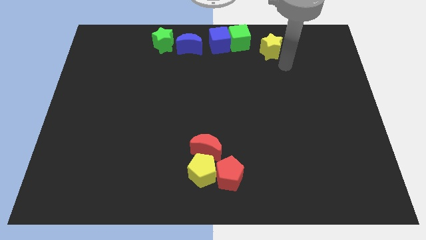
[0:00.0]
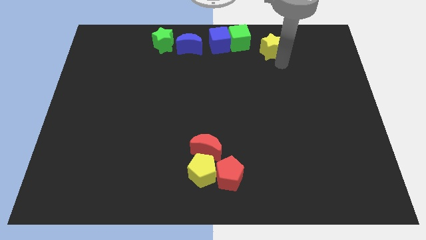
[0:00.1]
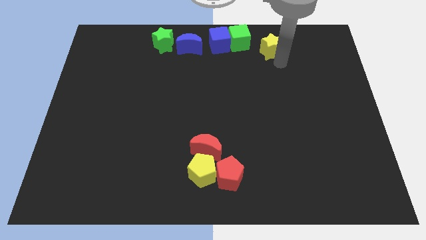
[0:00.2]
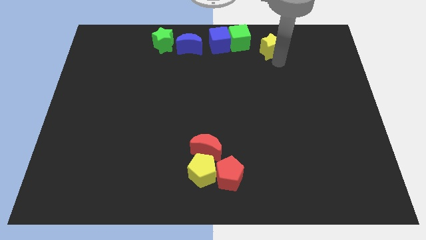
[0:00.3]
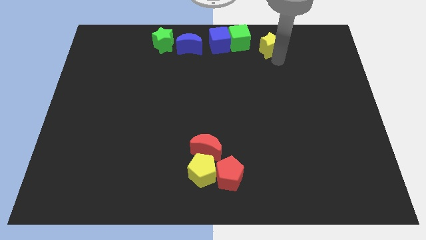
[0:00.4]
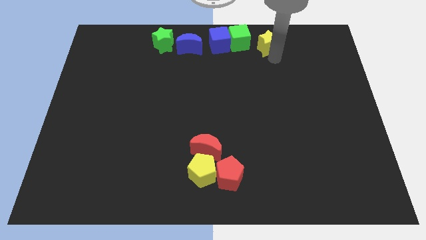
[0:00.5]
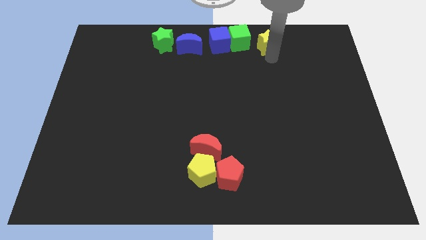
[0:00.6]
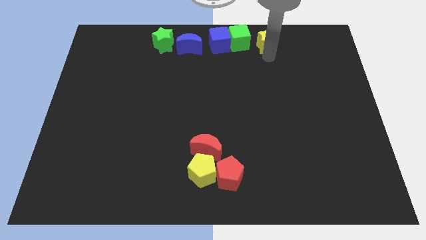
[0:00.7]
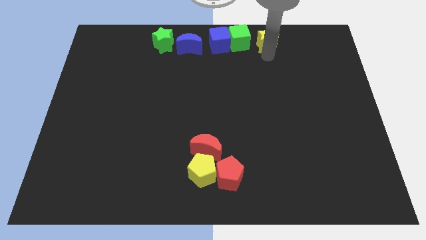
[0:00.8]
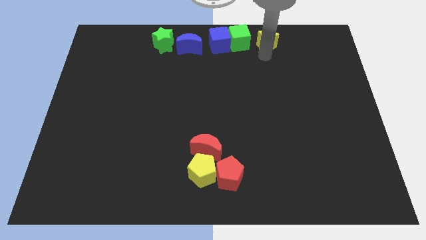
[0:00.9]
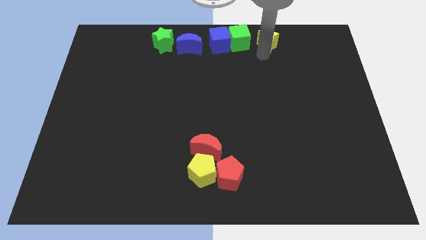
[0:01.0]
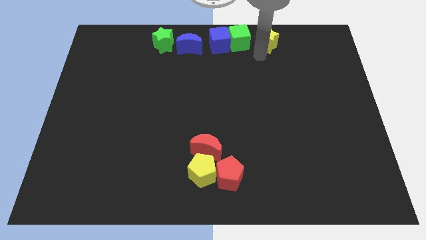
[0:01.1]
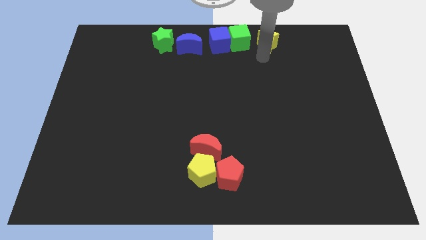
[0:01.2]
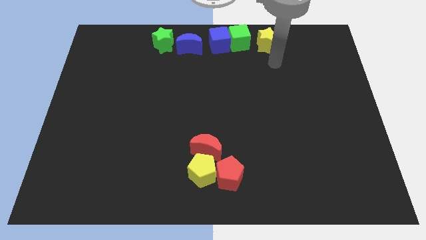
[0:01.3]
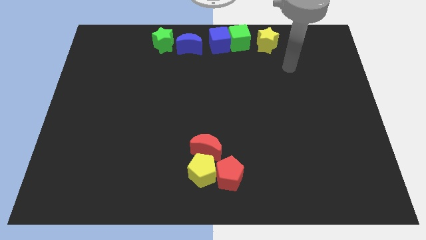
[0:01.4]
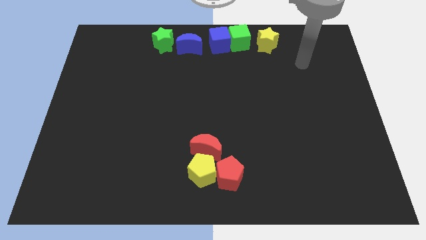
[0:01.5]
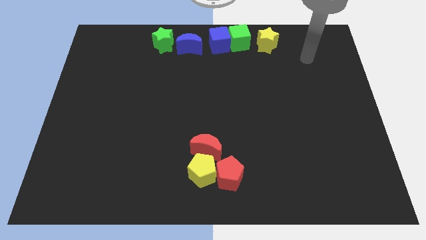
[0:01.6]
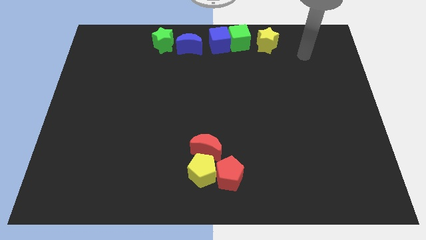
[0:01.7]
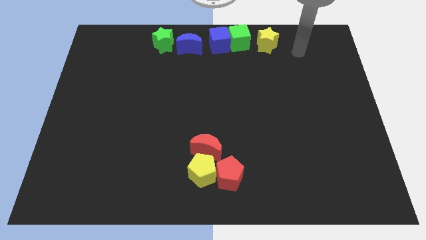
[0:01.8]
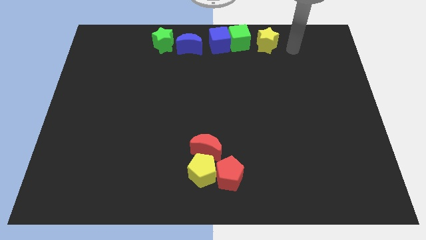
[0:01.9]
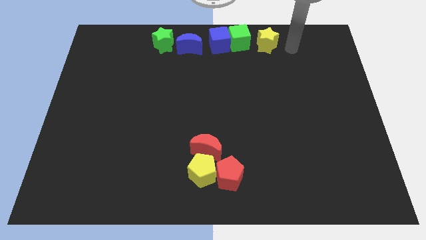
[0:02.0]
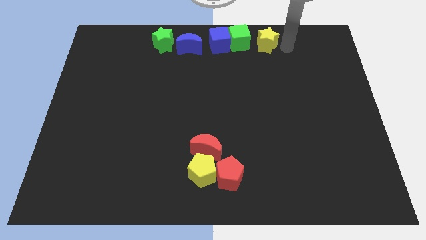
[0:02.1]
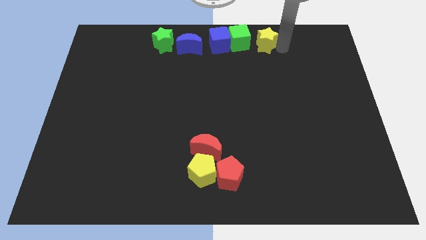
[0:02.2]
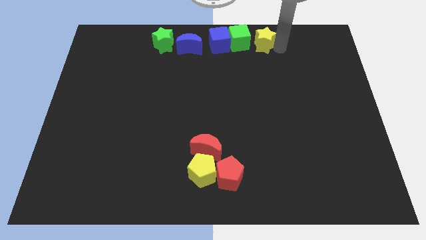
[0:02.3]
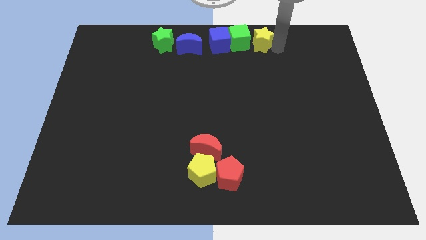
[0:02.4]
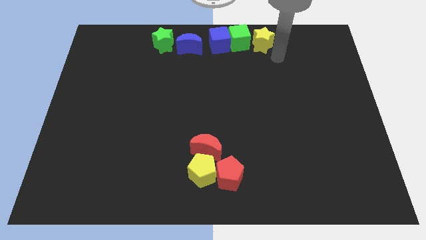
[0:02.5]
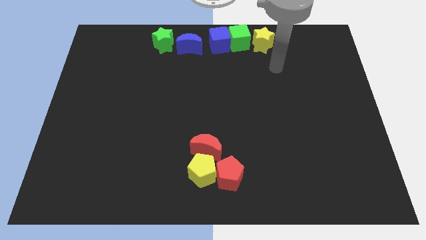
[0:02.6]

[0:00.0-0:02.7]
move the yellow star to the right side of the green cube

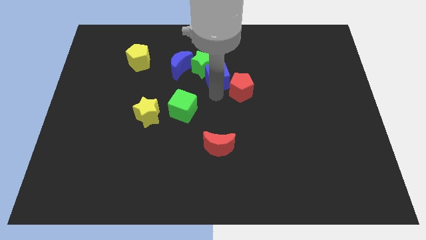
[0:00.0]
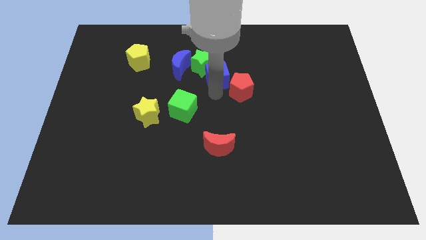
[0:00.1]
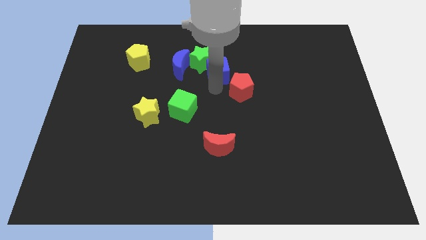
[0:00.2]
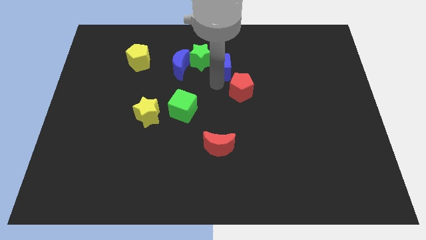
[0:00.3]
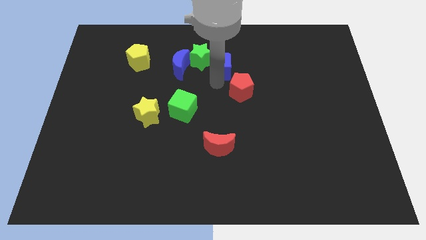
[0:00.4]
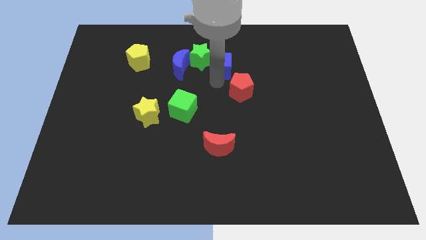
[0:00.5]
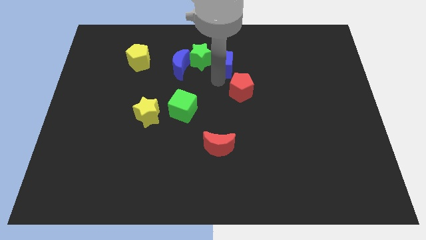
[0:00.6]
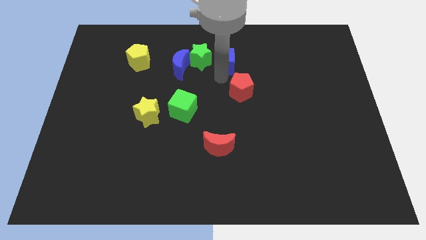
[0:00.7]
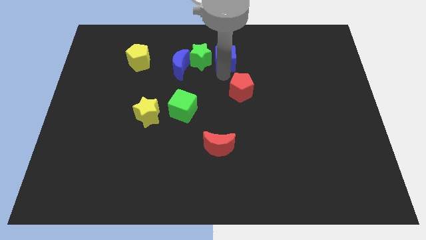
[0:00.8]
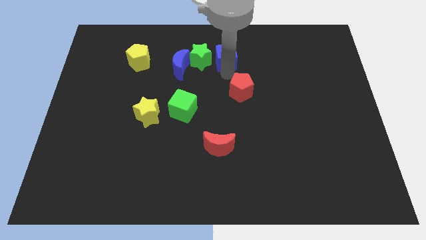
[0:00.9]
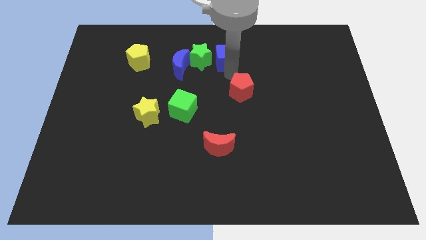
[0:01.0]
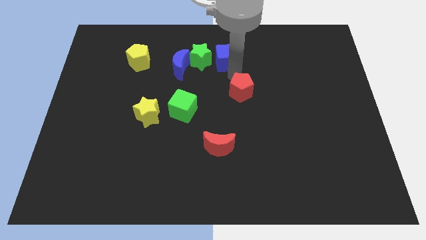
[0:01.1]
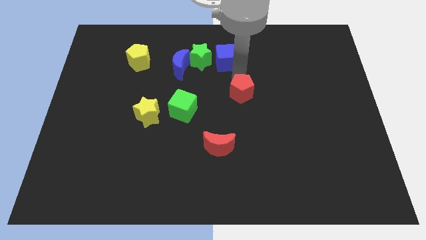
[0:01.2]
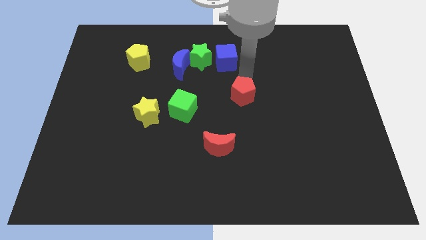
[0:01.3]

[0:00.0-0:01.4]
place the blue cube to the right of the green star

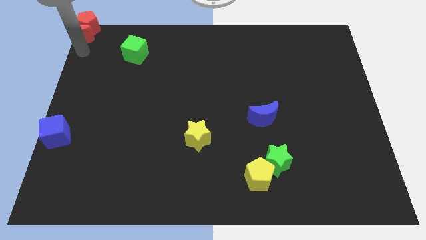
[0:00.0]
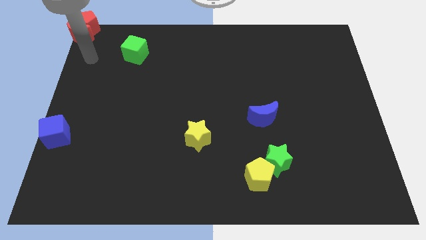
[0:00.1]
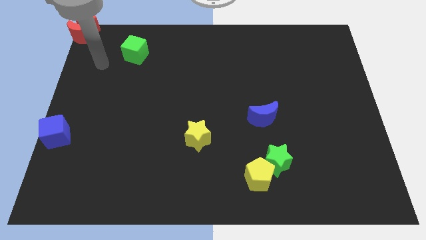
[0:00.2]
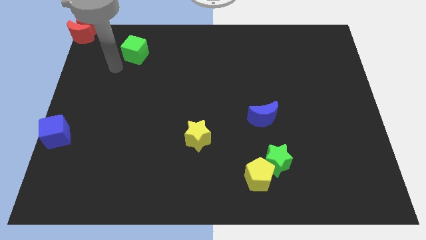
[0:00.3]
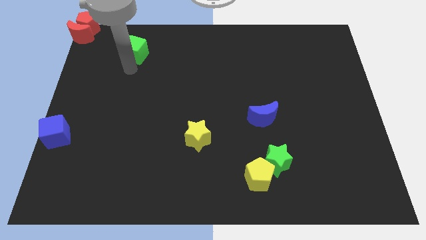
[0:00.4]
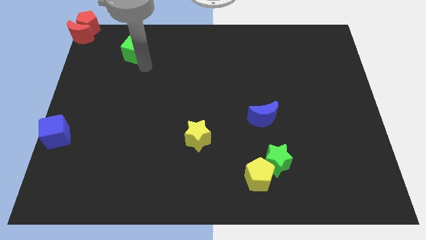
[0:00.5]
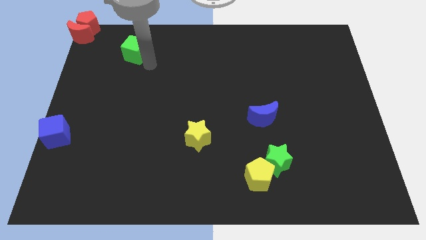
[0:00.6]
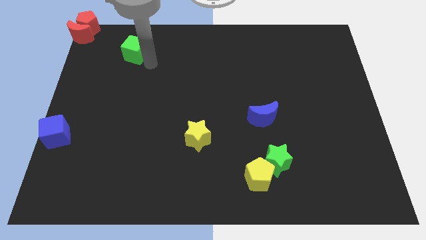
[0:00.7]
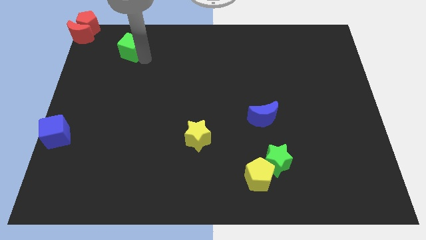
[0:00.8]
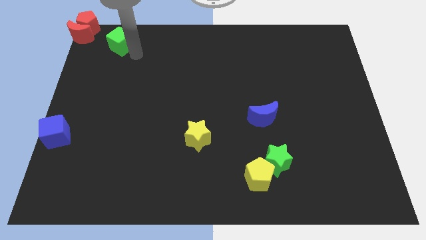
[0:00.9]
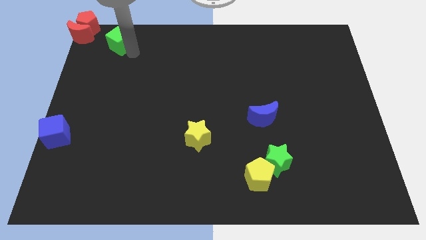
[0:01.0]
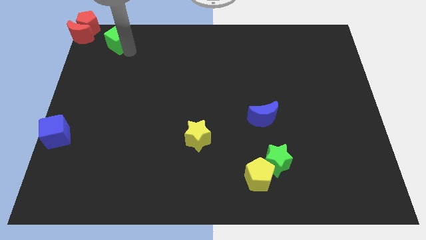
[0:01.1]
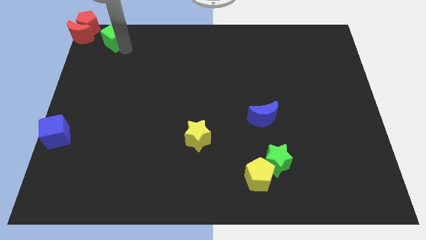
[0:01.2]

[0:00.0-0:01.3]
point your arm below green cube

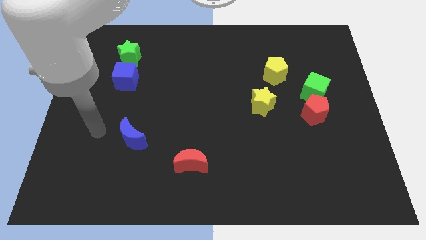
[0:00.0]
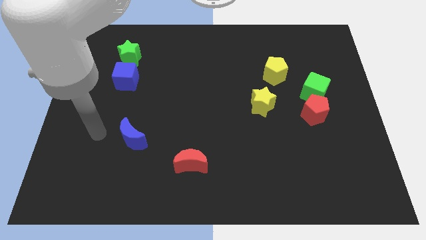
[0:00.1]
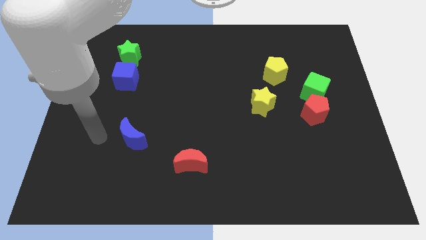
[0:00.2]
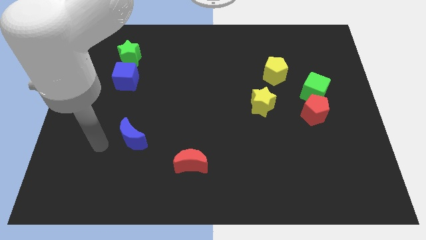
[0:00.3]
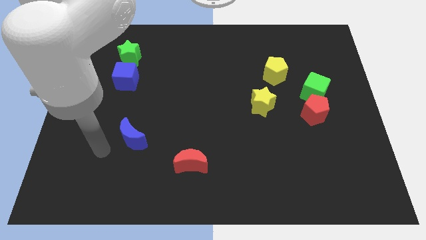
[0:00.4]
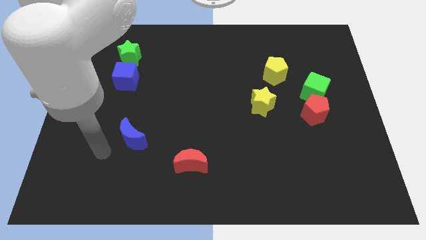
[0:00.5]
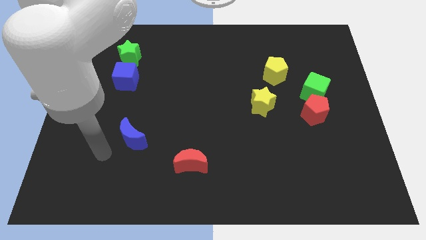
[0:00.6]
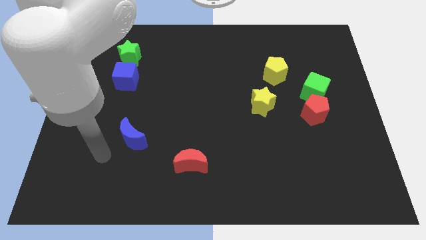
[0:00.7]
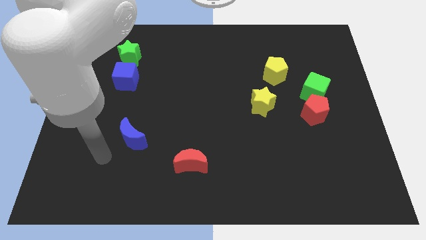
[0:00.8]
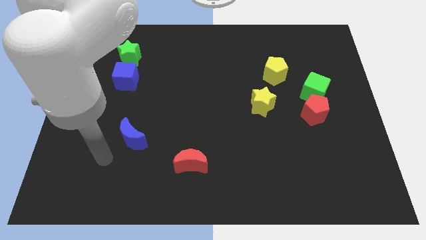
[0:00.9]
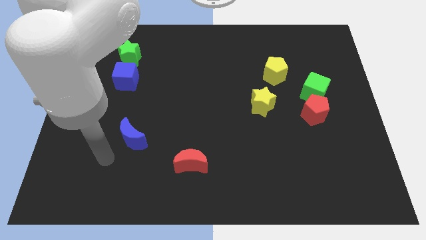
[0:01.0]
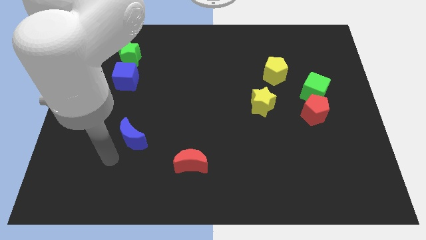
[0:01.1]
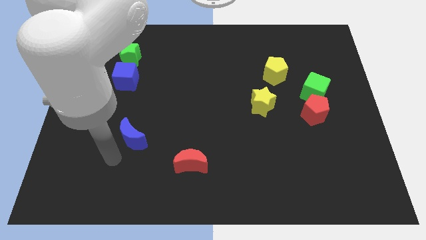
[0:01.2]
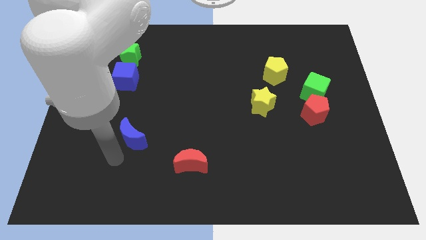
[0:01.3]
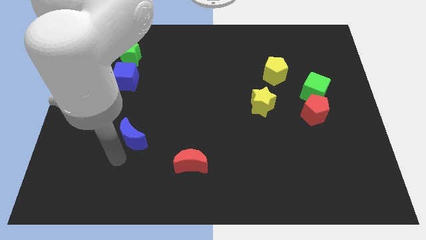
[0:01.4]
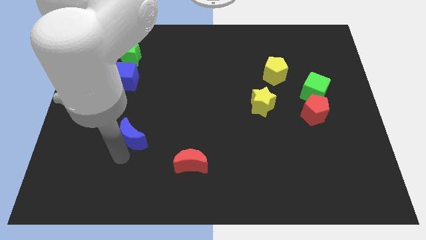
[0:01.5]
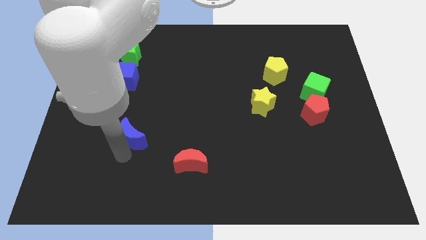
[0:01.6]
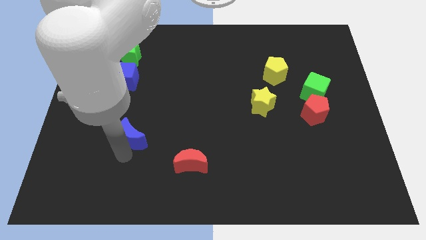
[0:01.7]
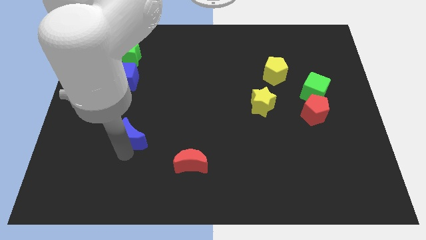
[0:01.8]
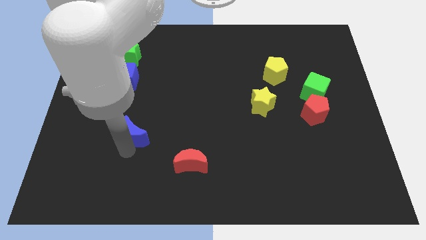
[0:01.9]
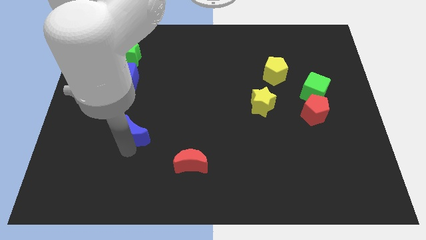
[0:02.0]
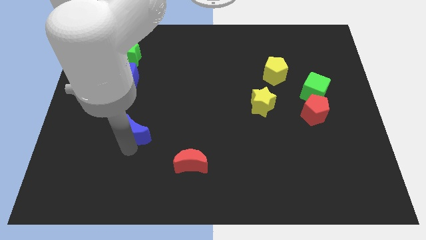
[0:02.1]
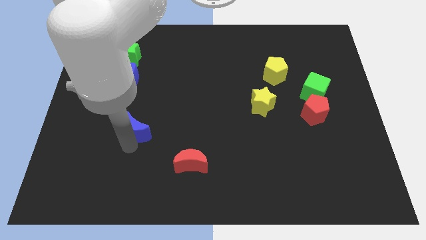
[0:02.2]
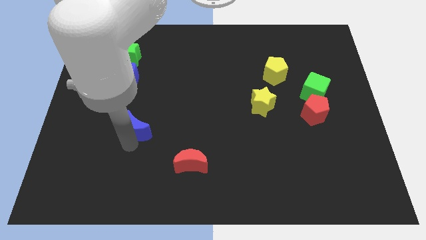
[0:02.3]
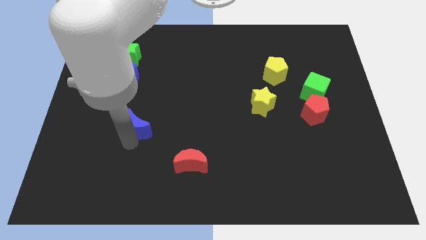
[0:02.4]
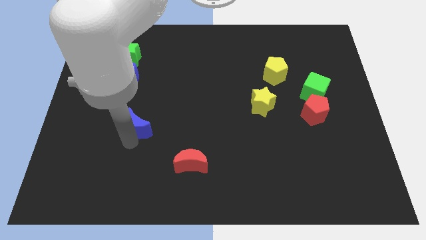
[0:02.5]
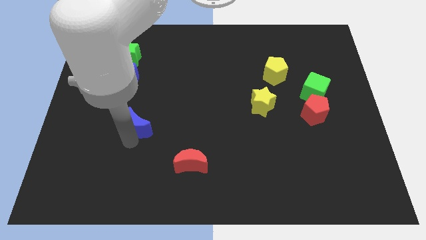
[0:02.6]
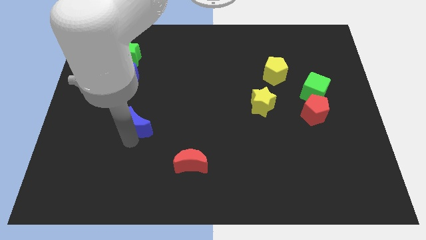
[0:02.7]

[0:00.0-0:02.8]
push blue moon upwards

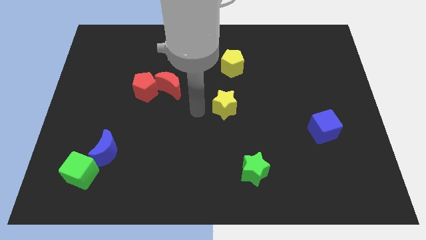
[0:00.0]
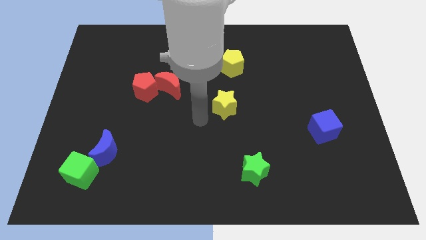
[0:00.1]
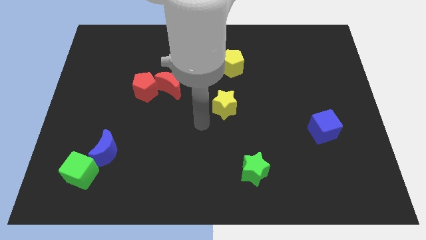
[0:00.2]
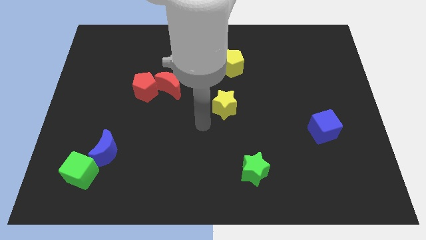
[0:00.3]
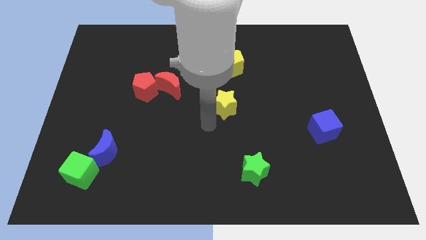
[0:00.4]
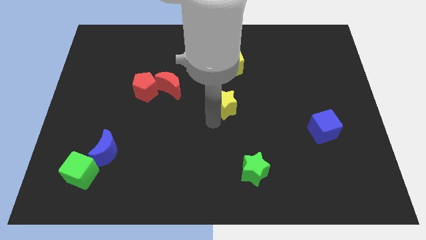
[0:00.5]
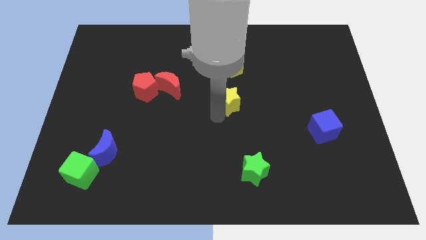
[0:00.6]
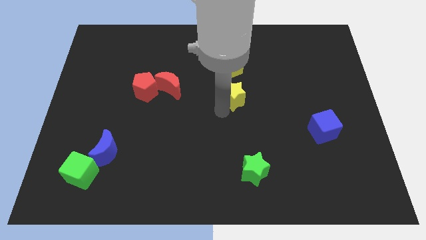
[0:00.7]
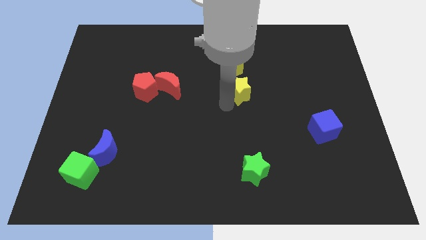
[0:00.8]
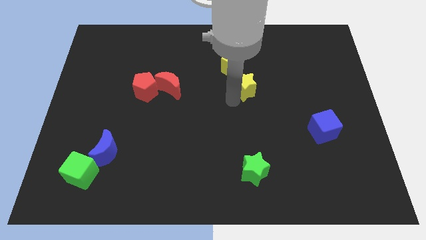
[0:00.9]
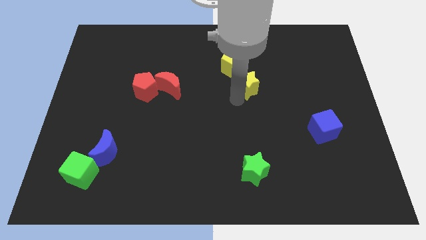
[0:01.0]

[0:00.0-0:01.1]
place the yellow star diagonally bottom right to the yellow pentagon
